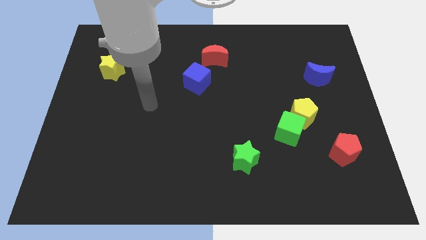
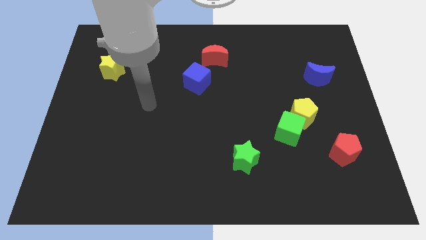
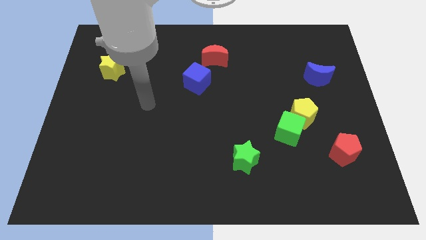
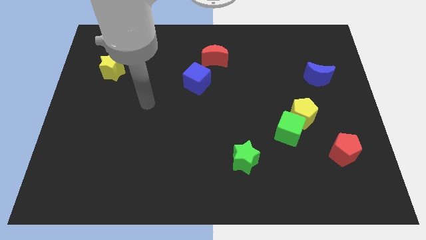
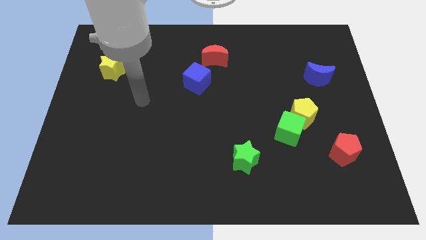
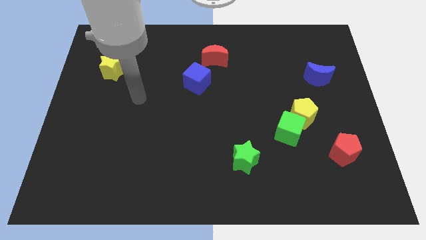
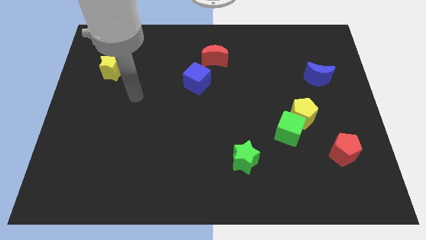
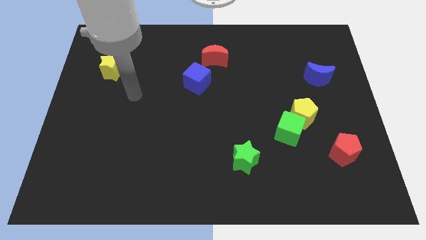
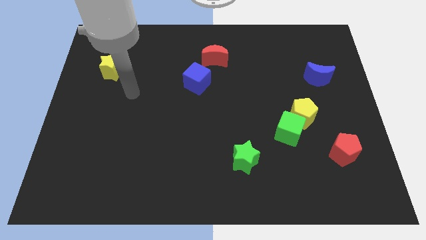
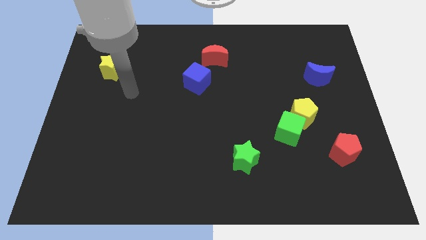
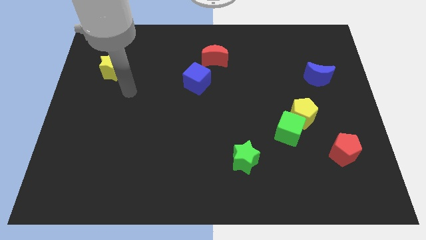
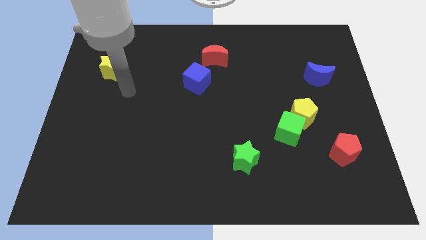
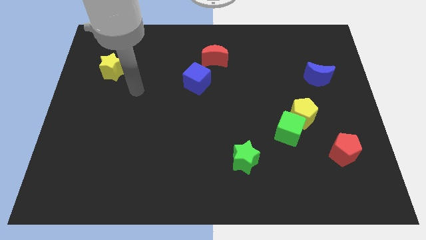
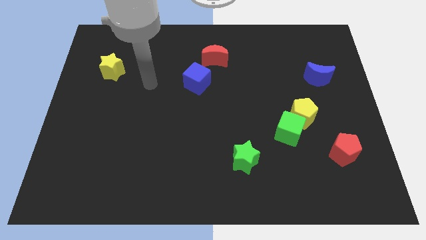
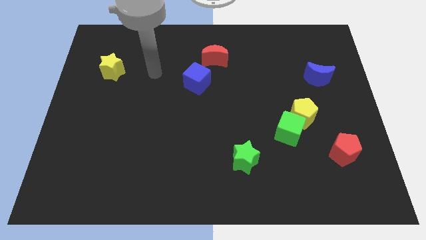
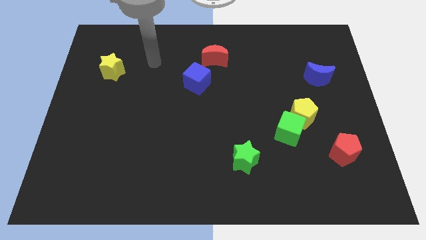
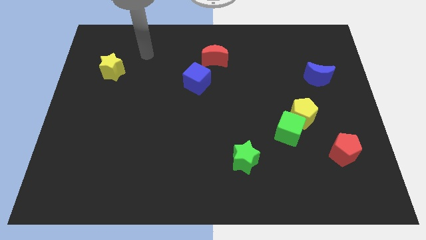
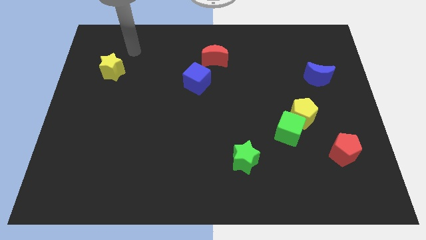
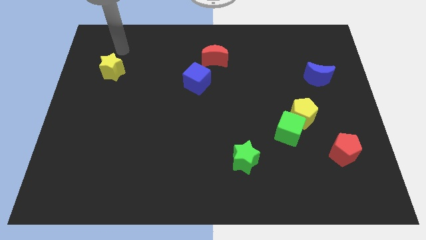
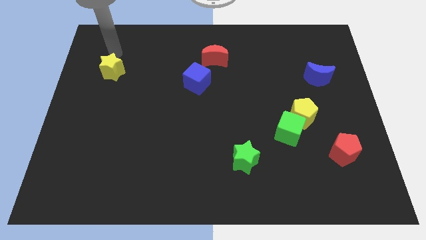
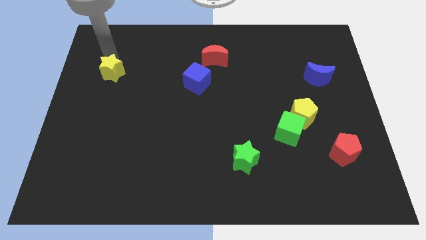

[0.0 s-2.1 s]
touch the yellow star

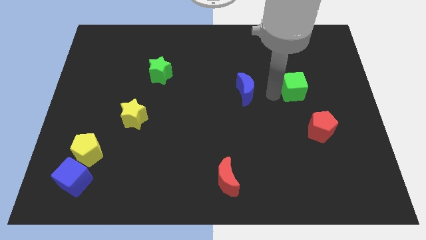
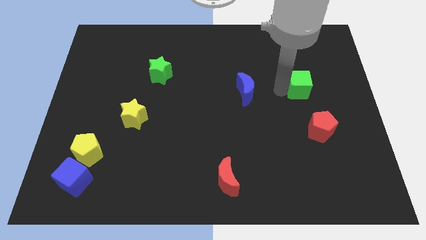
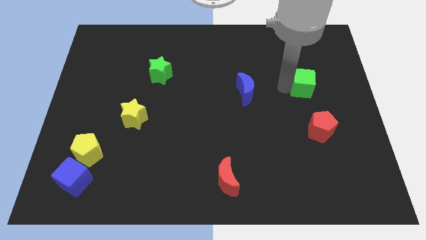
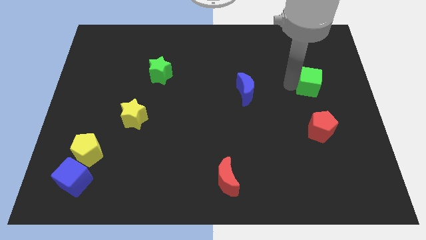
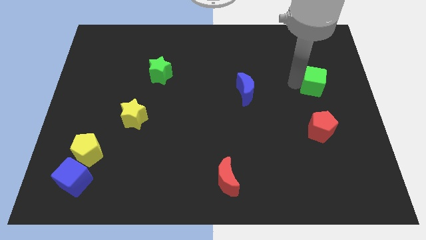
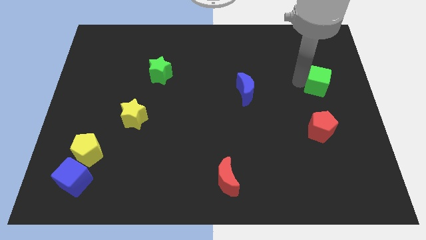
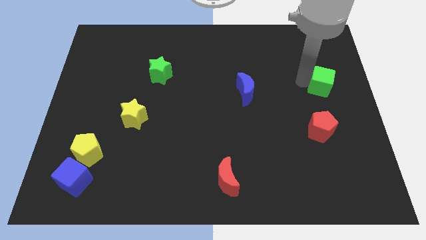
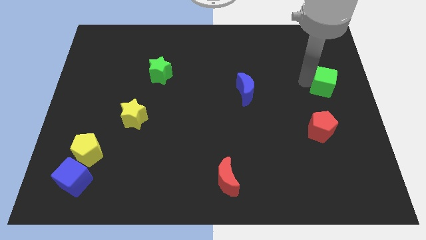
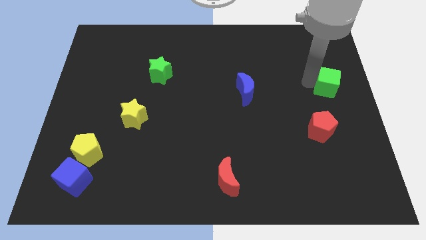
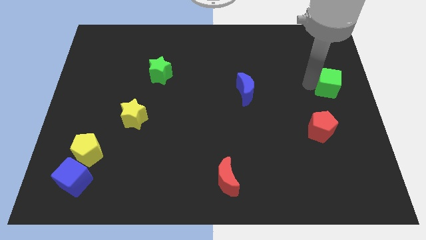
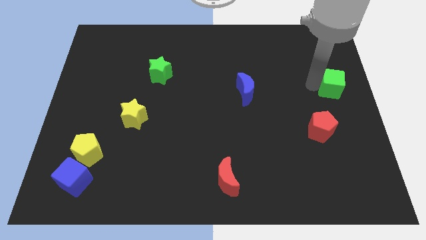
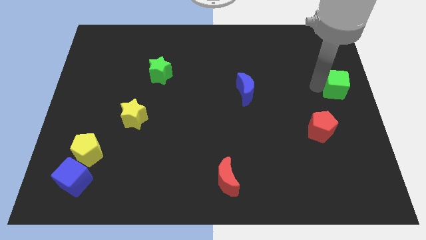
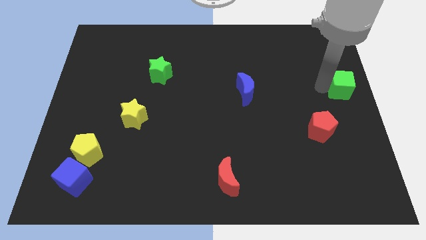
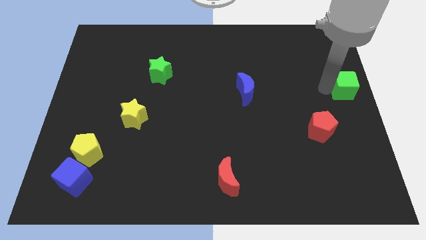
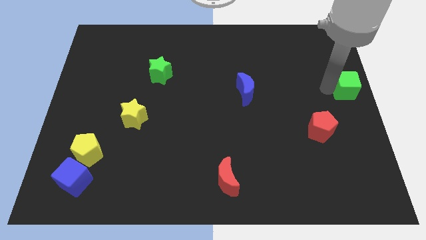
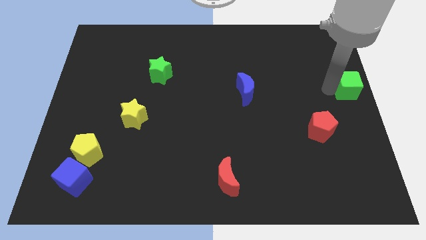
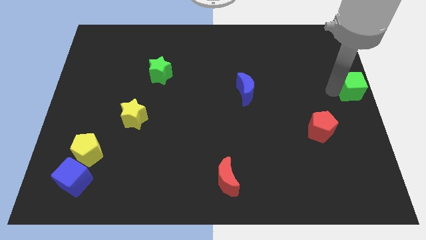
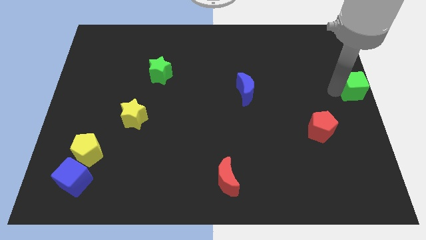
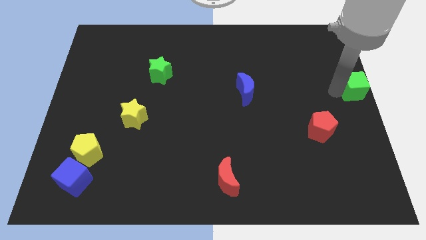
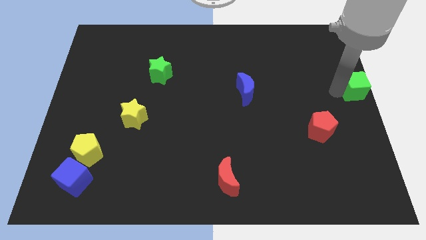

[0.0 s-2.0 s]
place the green cube diagonally above the green cube

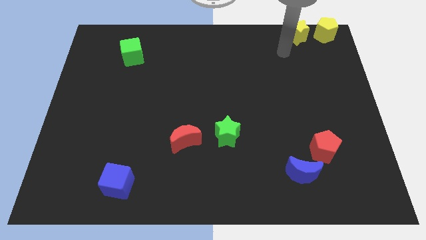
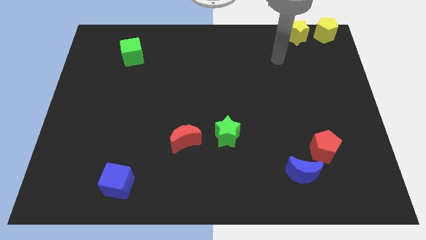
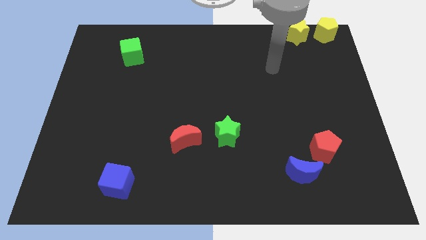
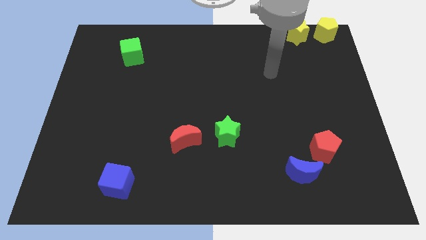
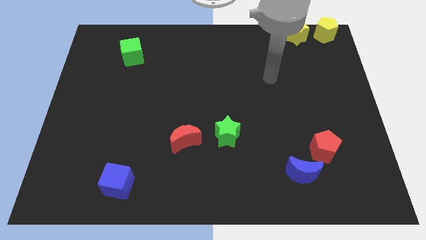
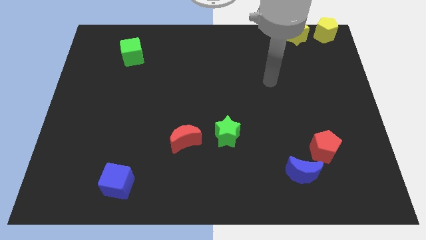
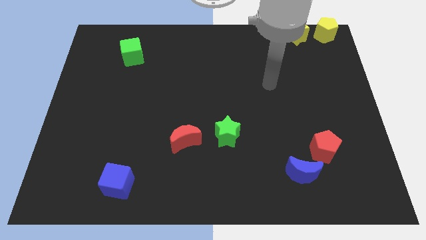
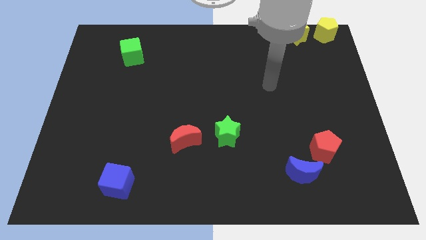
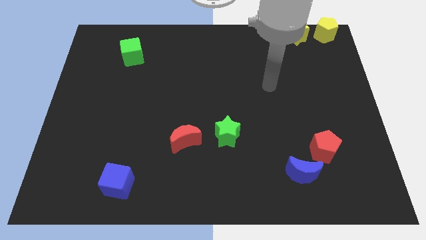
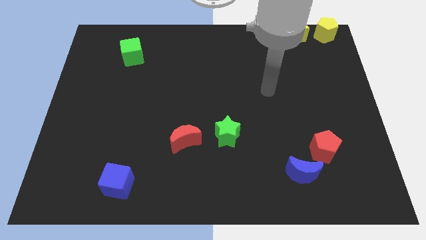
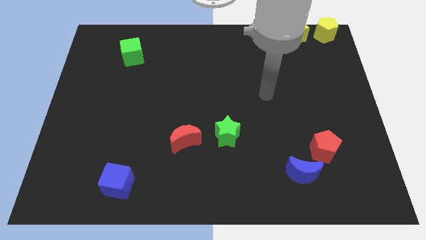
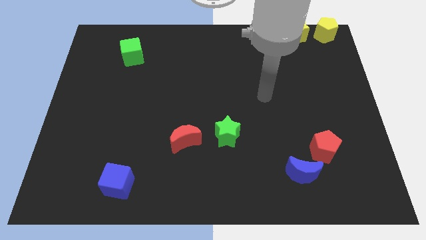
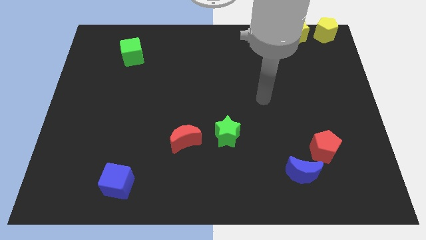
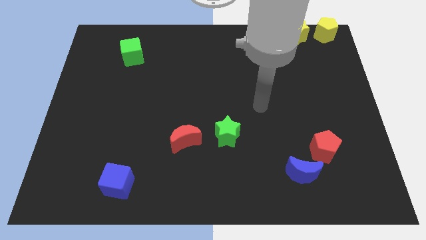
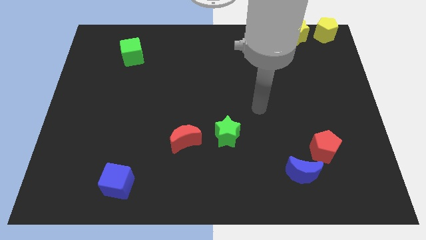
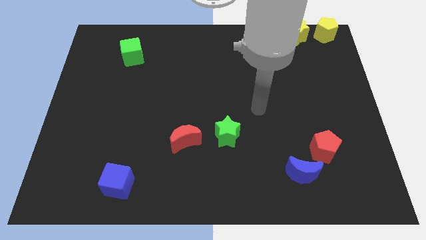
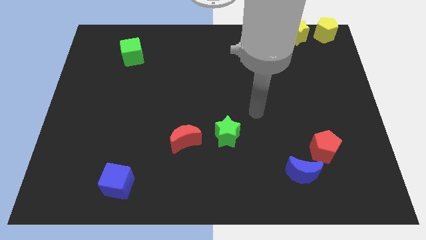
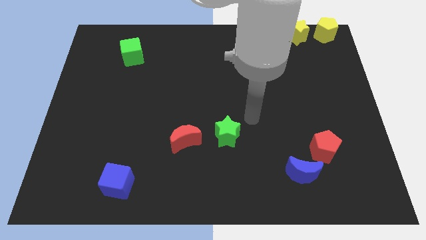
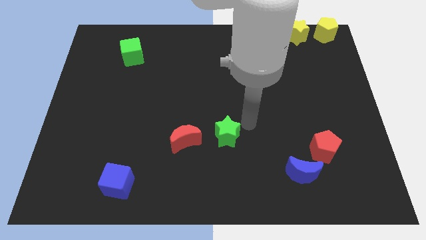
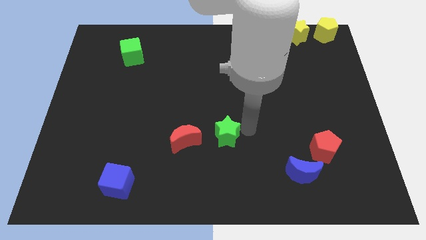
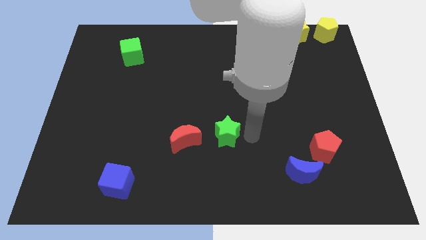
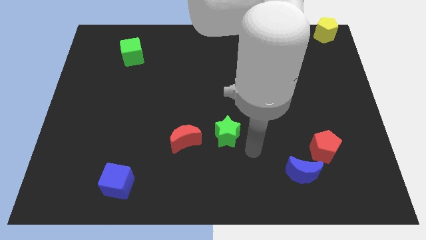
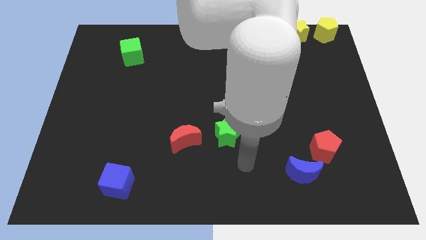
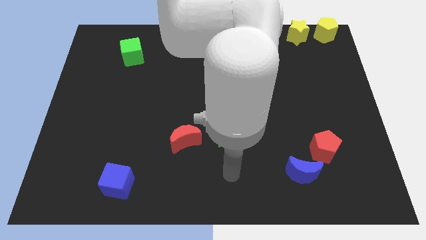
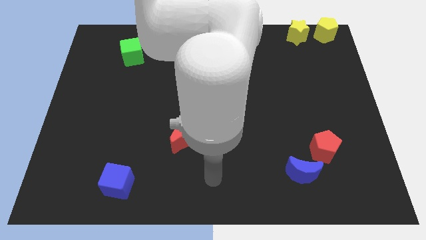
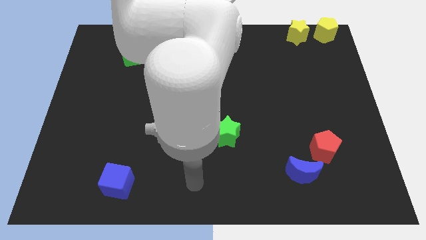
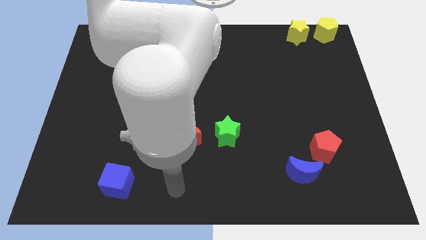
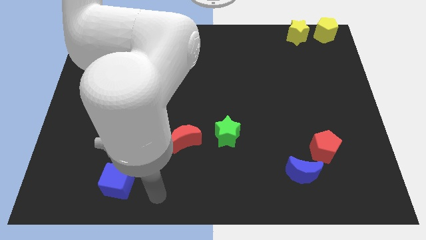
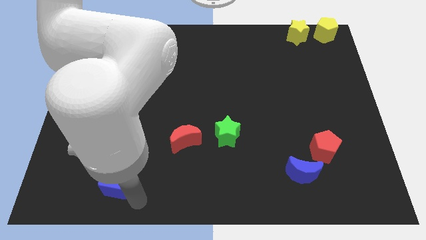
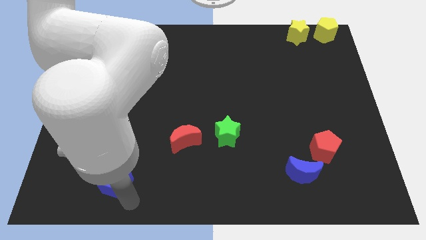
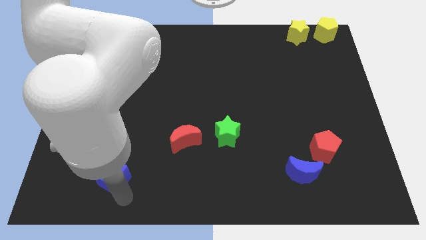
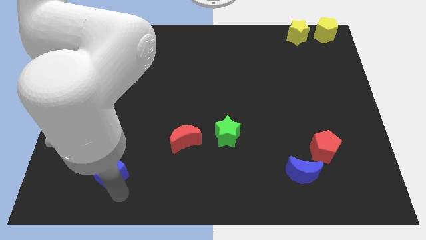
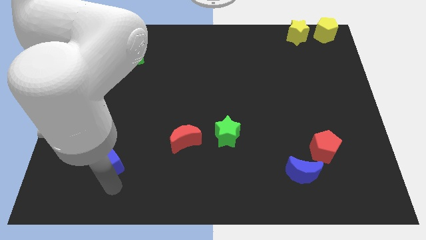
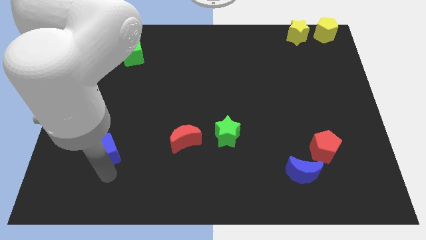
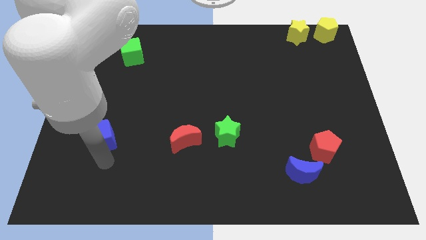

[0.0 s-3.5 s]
move the blue cube to the left of the red crescent

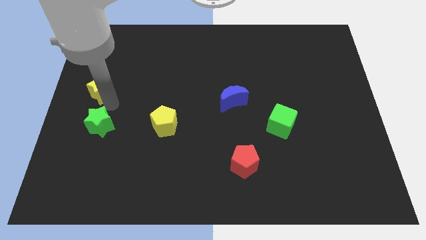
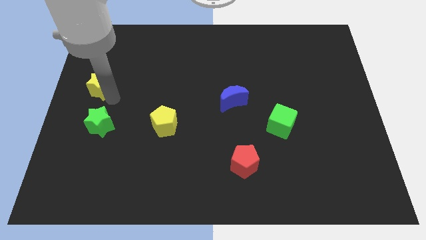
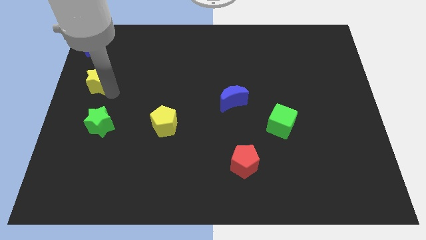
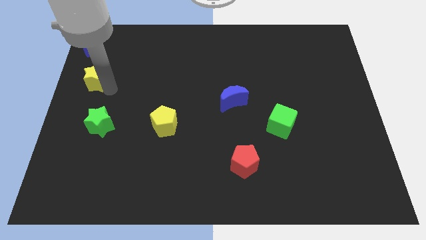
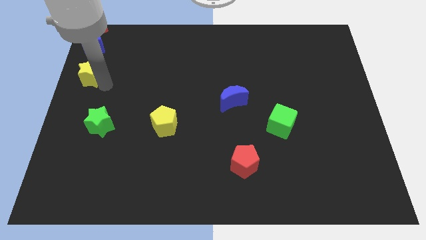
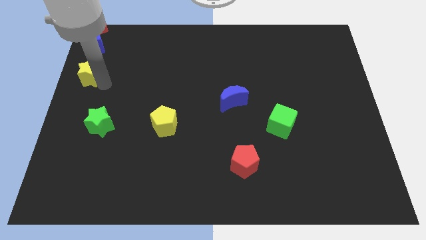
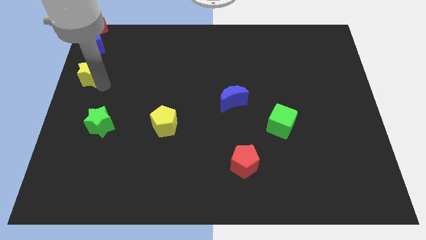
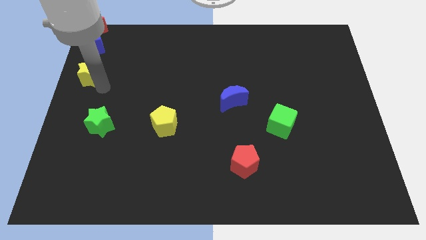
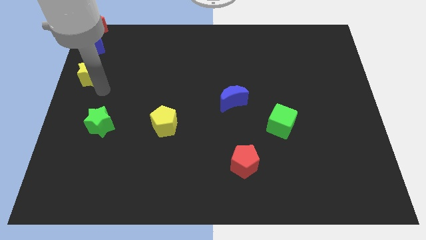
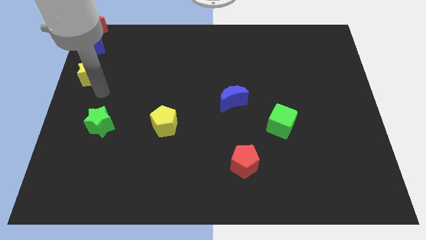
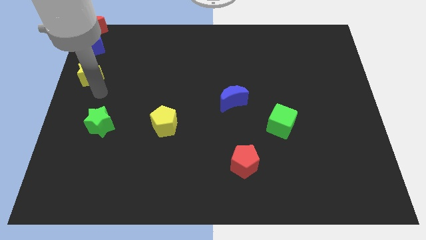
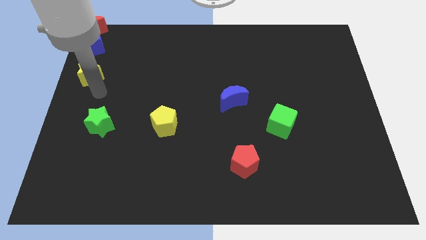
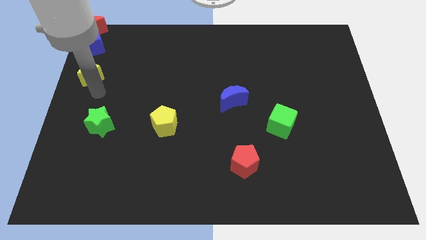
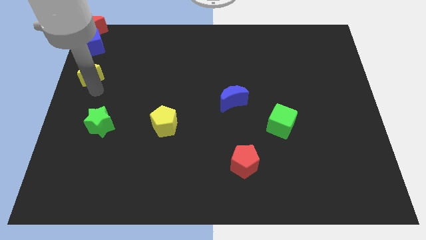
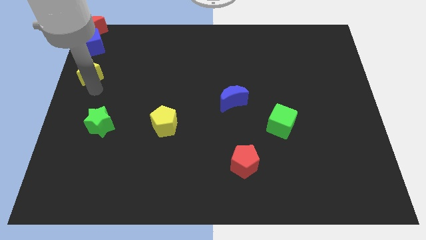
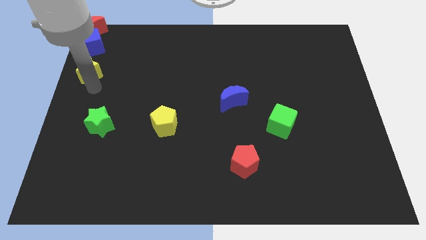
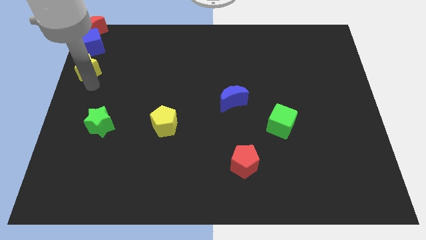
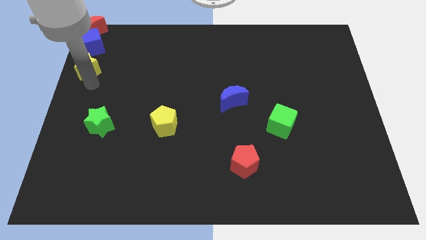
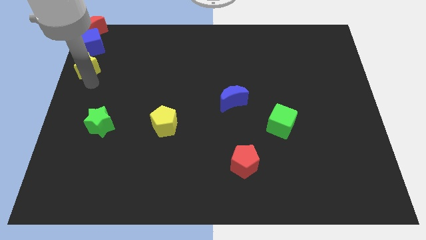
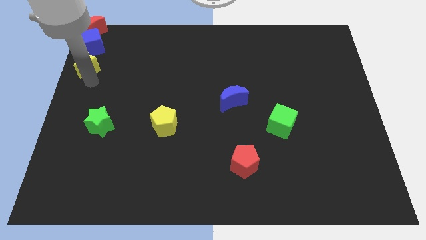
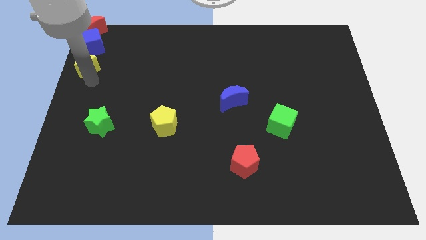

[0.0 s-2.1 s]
push the yellow star to the bottom of the blue cube
